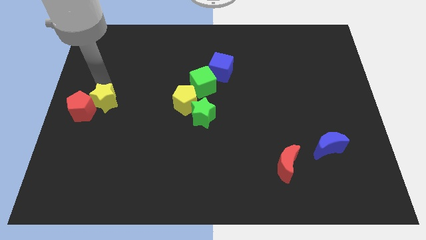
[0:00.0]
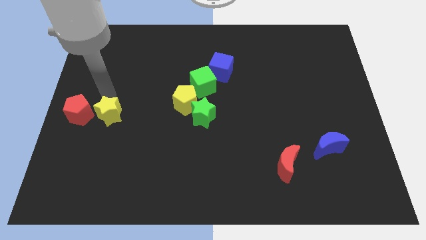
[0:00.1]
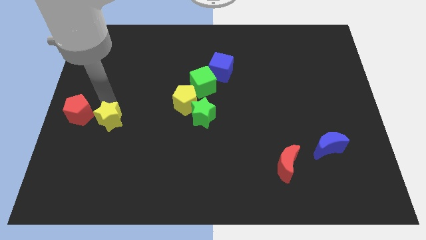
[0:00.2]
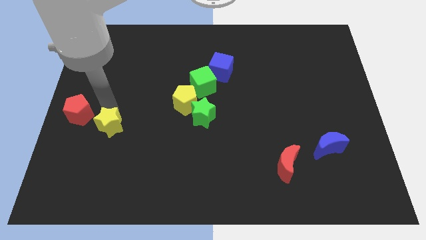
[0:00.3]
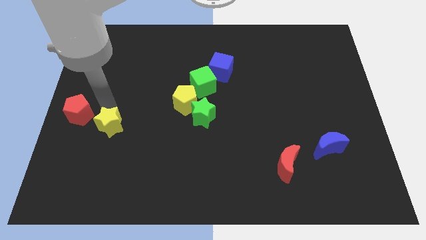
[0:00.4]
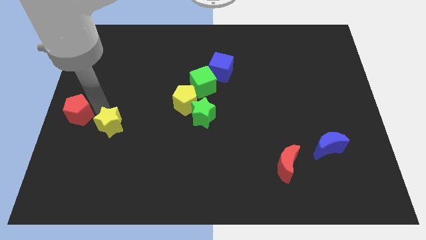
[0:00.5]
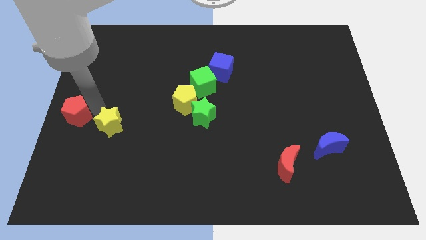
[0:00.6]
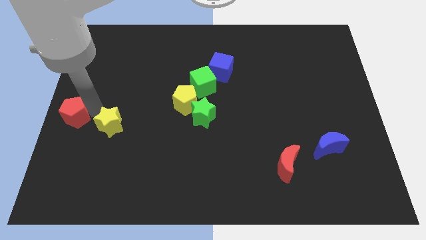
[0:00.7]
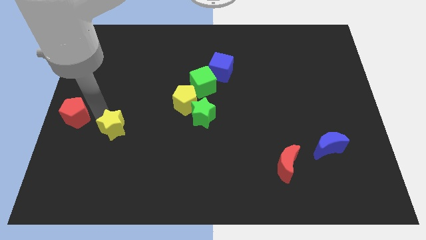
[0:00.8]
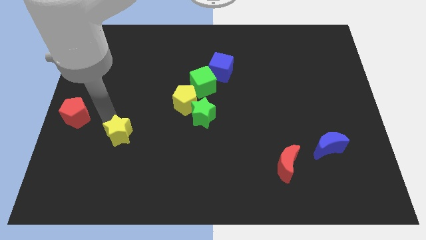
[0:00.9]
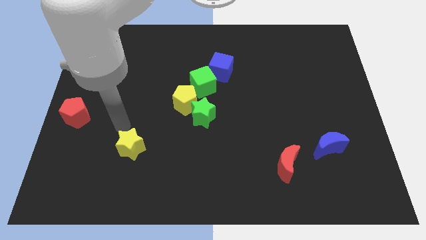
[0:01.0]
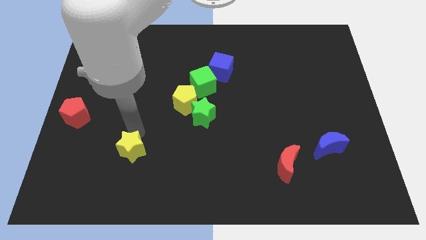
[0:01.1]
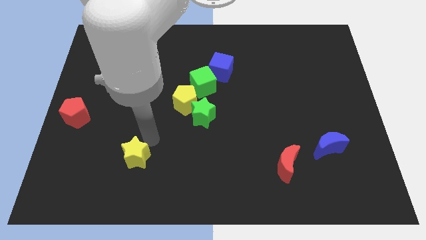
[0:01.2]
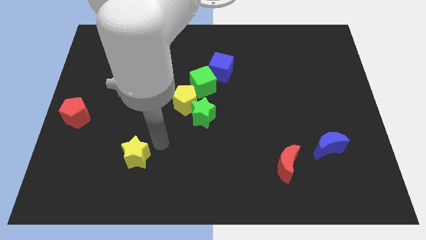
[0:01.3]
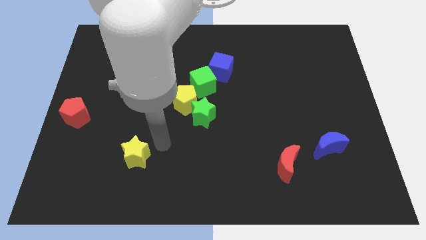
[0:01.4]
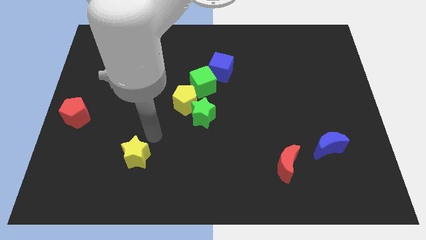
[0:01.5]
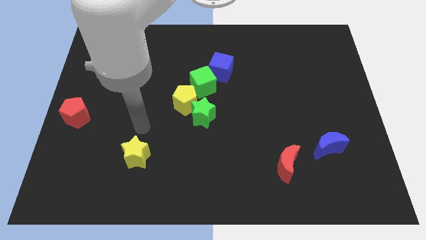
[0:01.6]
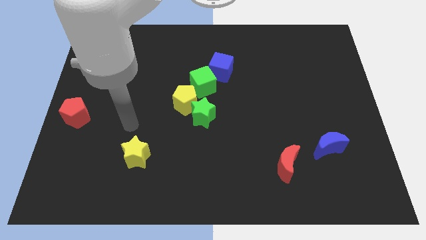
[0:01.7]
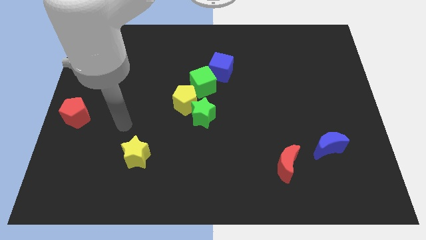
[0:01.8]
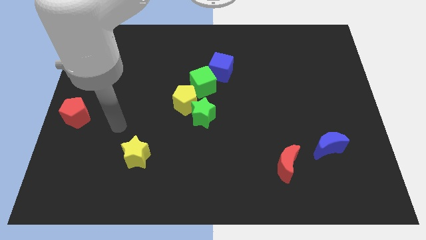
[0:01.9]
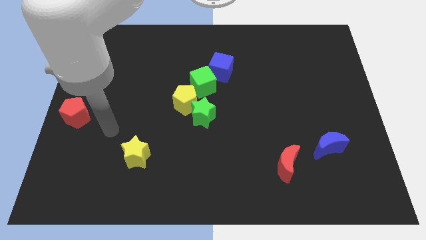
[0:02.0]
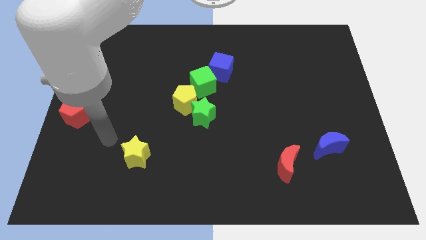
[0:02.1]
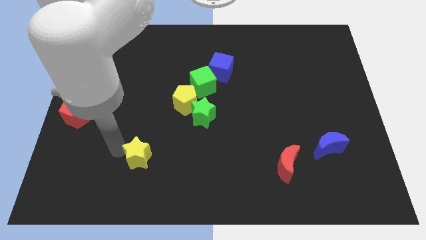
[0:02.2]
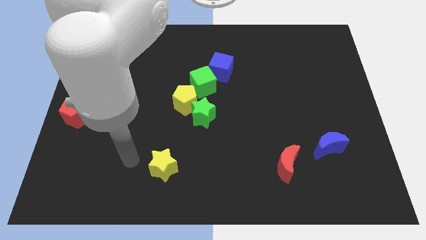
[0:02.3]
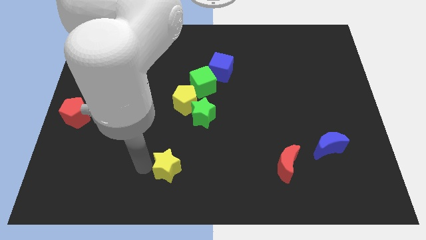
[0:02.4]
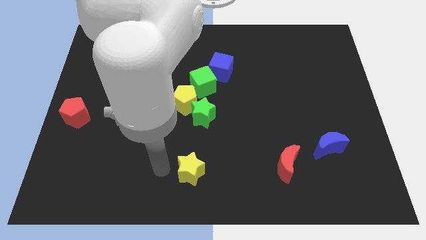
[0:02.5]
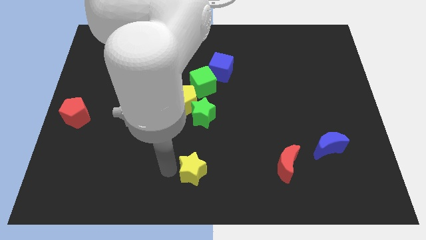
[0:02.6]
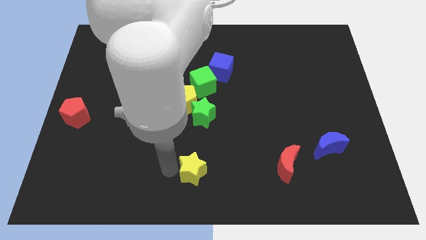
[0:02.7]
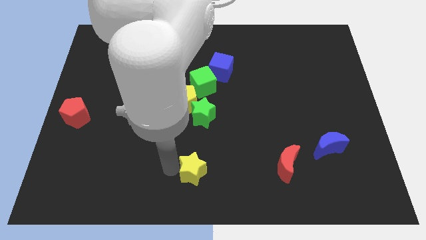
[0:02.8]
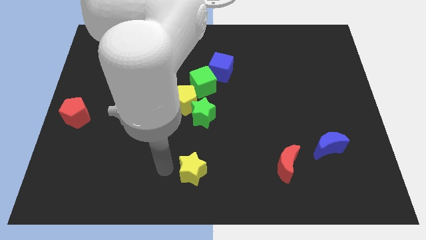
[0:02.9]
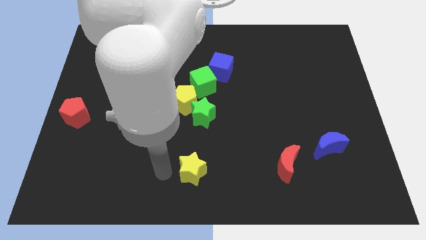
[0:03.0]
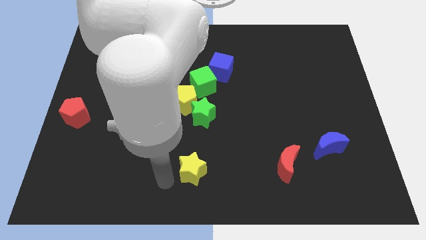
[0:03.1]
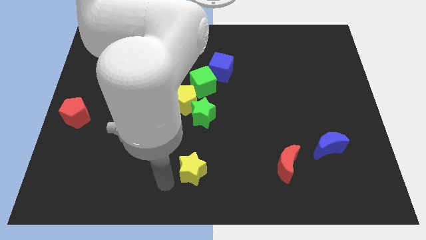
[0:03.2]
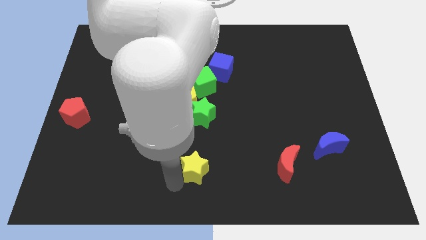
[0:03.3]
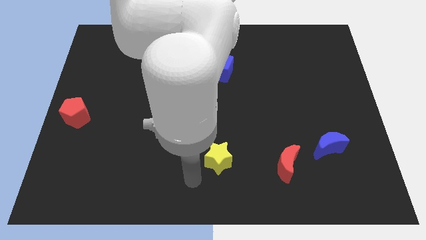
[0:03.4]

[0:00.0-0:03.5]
move yellow star to bottom center

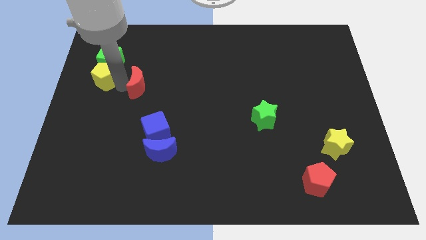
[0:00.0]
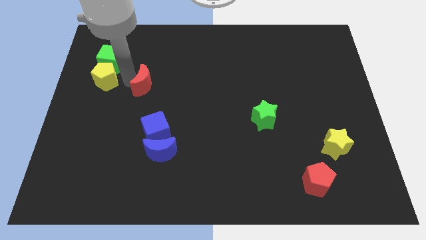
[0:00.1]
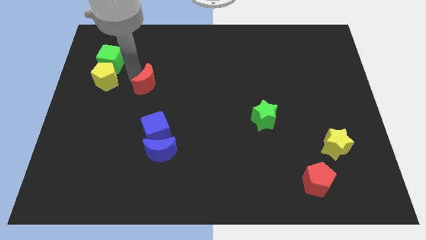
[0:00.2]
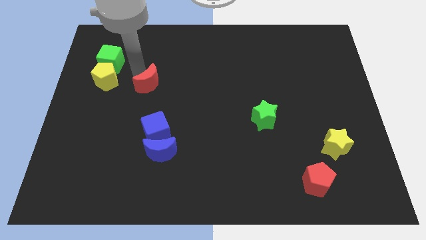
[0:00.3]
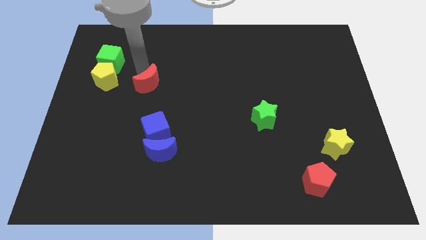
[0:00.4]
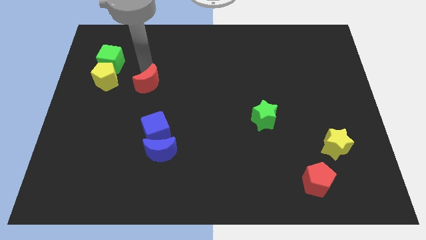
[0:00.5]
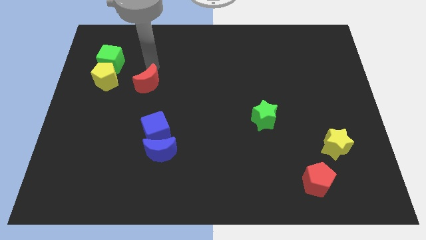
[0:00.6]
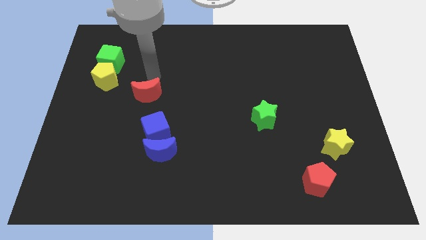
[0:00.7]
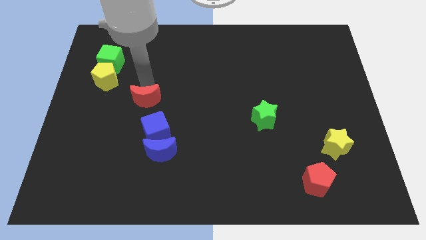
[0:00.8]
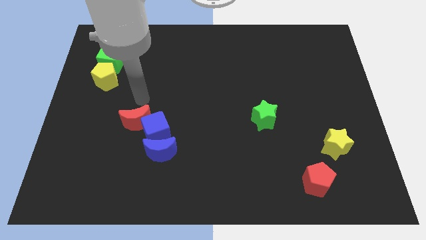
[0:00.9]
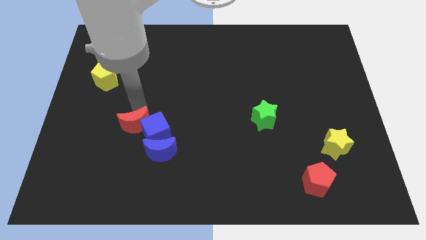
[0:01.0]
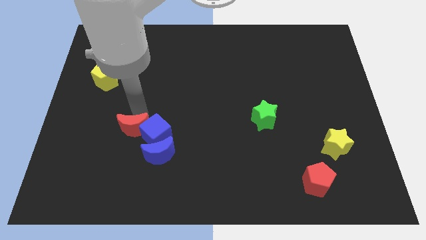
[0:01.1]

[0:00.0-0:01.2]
push the red crescent into blue cube

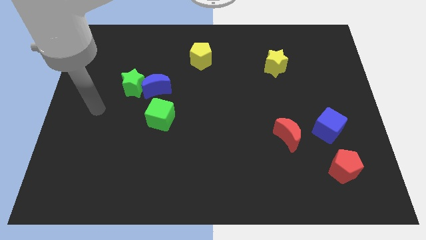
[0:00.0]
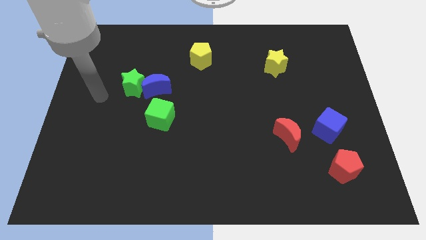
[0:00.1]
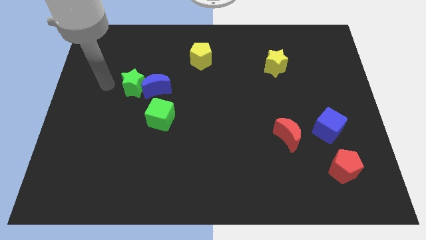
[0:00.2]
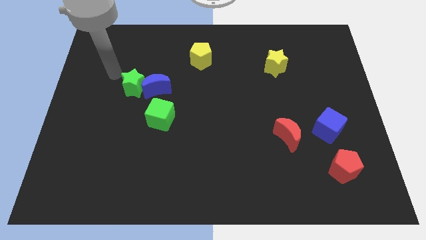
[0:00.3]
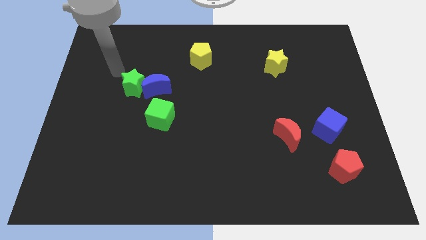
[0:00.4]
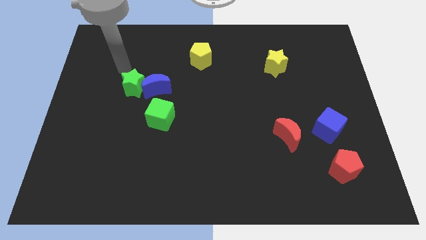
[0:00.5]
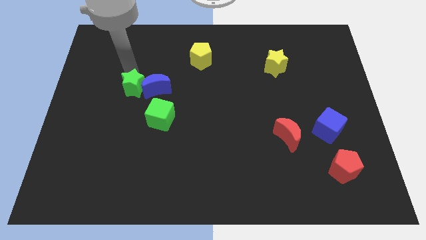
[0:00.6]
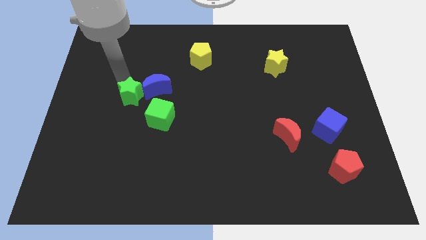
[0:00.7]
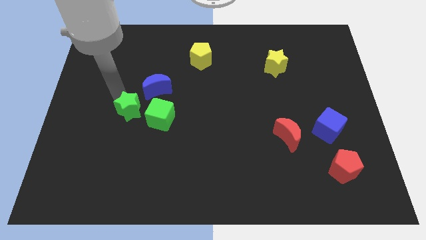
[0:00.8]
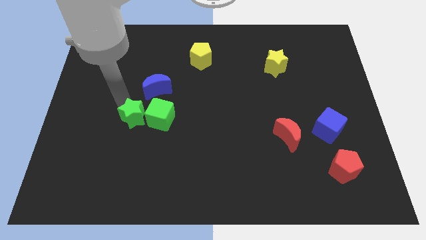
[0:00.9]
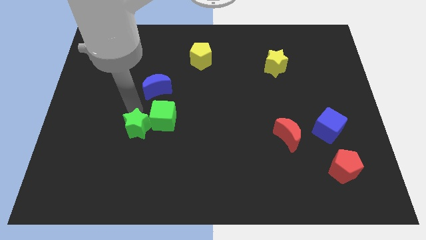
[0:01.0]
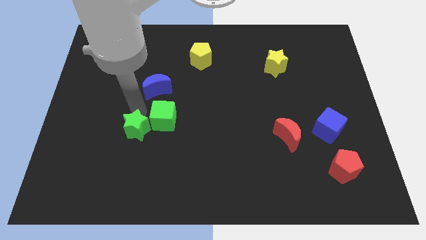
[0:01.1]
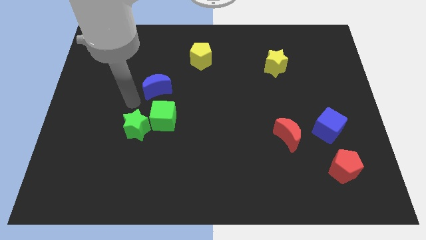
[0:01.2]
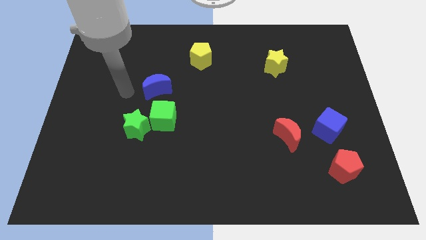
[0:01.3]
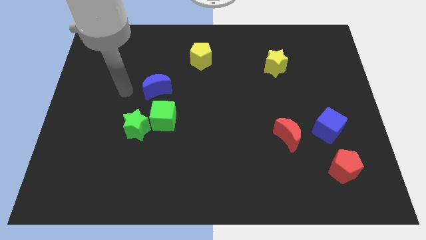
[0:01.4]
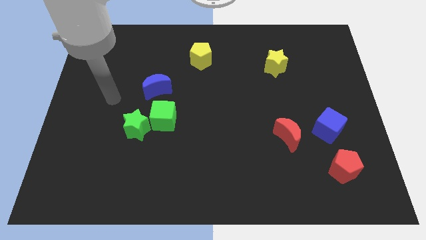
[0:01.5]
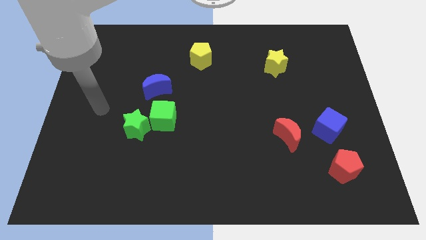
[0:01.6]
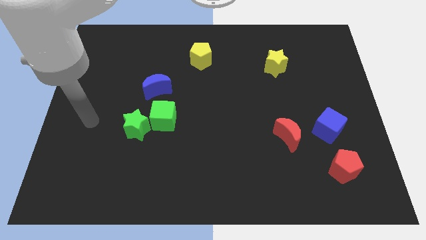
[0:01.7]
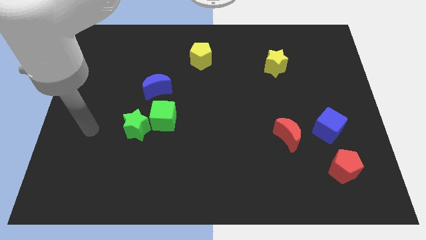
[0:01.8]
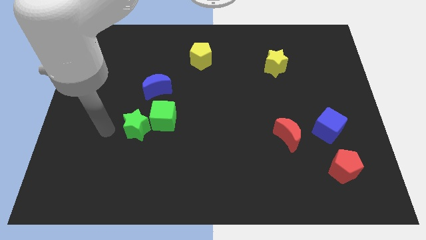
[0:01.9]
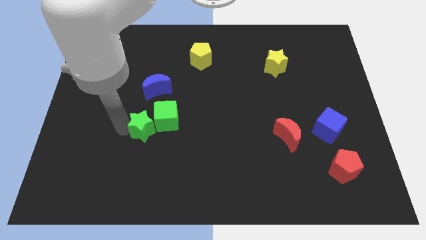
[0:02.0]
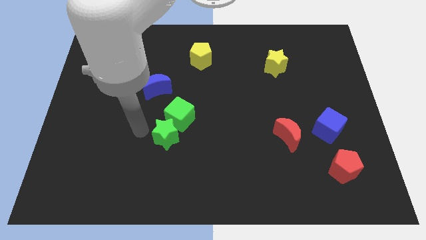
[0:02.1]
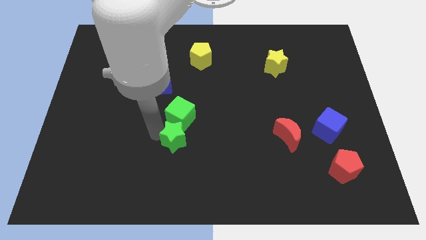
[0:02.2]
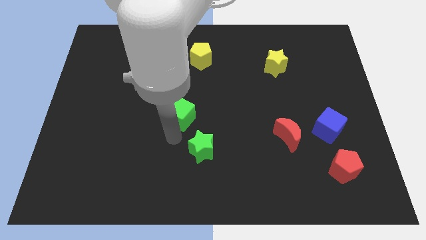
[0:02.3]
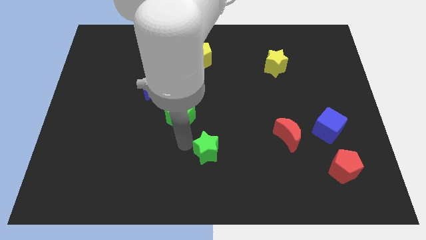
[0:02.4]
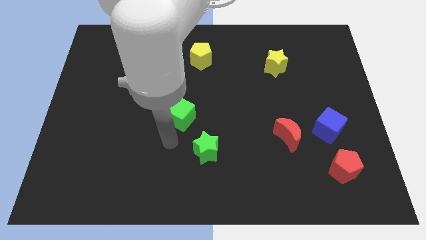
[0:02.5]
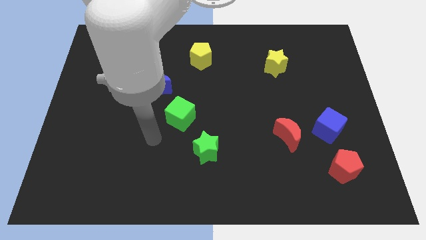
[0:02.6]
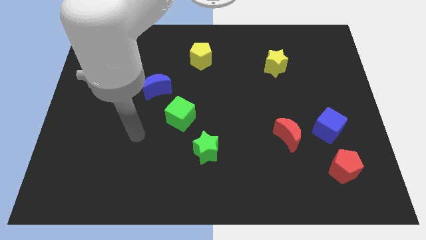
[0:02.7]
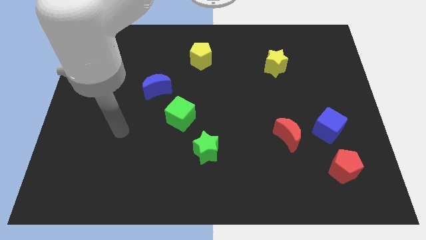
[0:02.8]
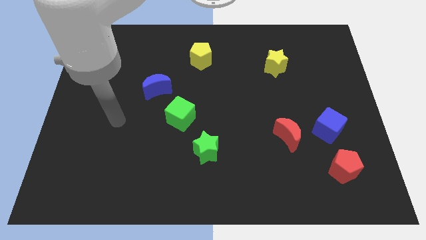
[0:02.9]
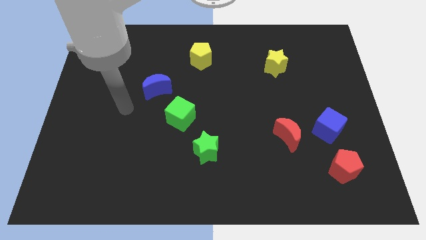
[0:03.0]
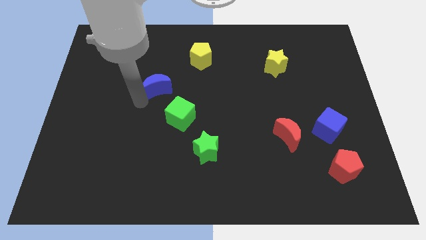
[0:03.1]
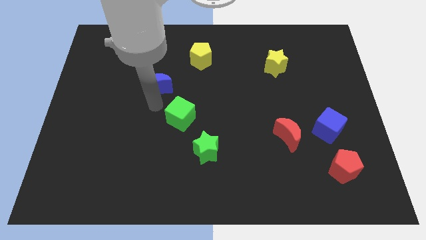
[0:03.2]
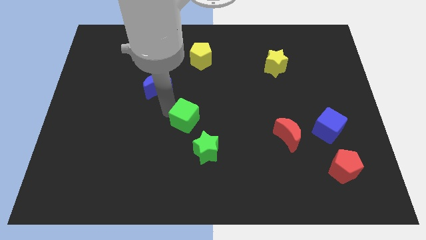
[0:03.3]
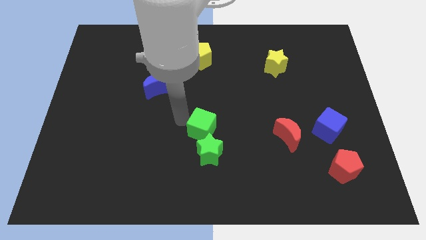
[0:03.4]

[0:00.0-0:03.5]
move the green blocks below the yellow pentagon

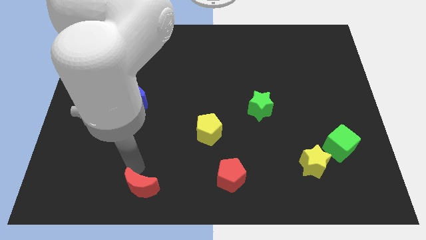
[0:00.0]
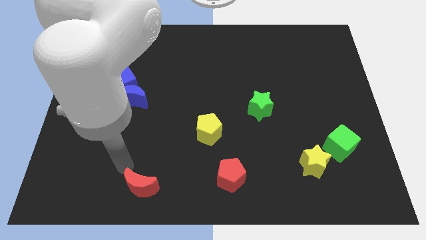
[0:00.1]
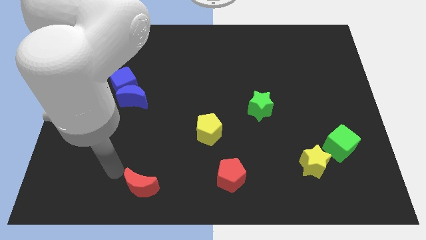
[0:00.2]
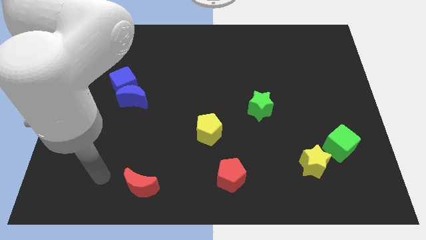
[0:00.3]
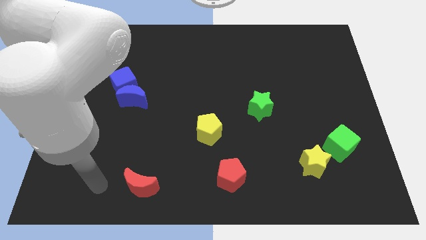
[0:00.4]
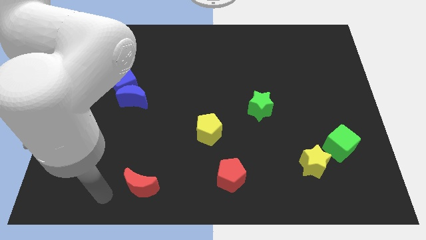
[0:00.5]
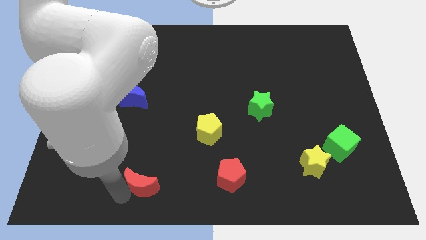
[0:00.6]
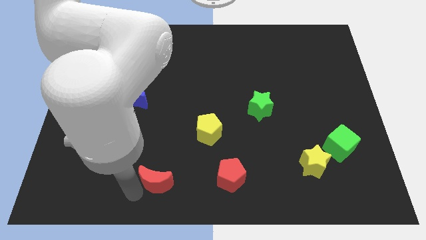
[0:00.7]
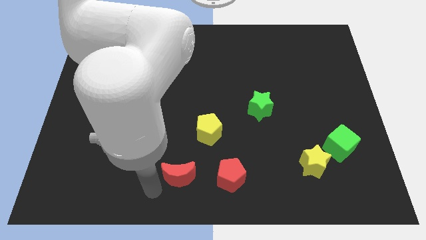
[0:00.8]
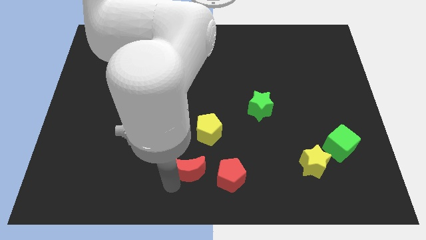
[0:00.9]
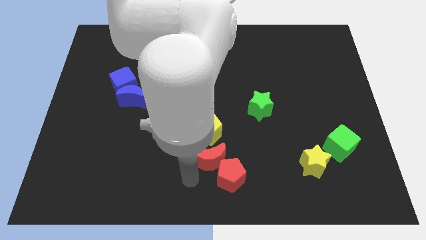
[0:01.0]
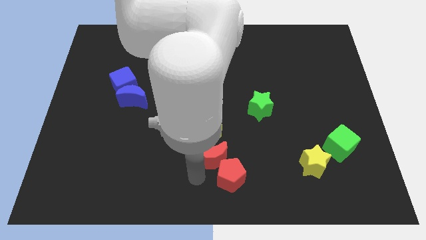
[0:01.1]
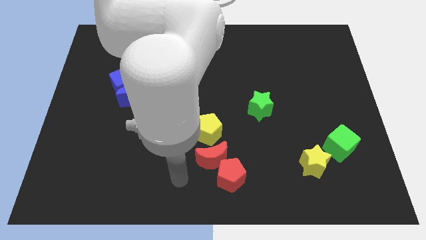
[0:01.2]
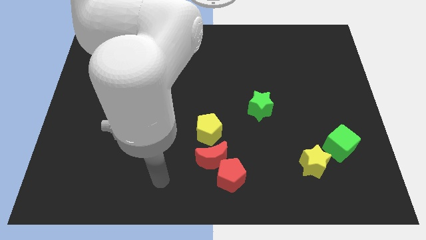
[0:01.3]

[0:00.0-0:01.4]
place red moon to the bottom of yellow pentagon
